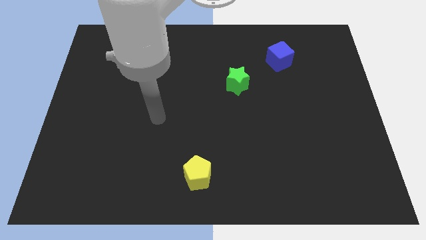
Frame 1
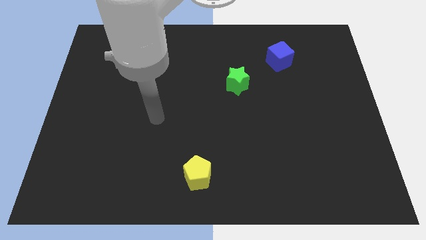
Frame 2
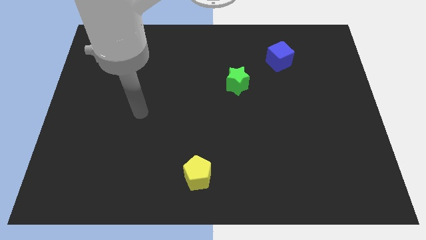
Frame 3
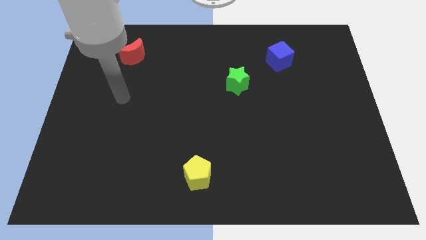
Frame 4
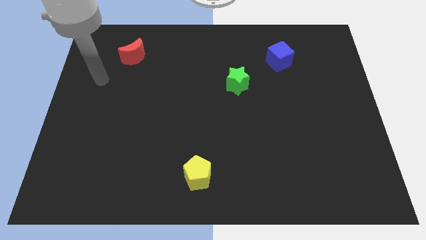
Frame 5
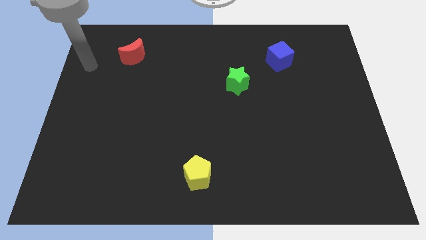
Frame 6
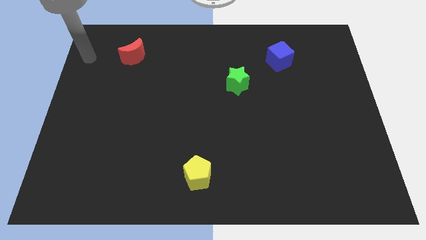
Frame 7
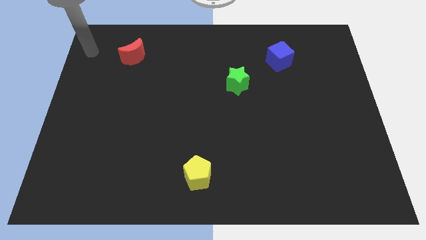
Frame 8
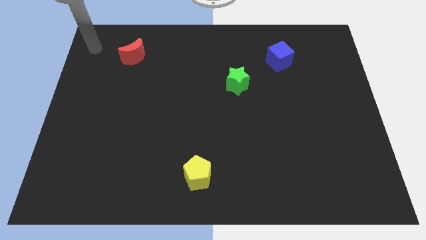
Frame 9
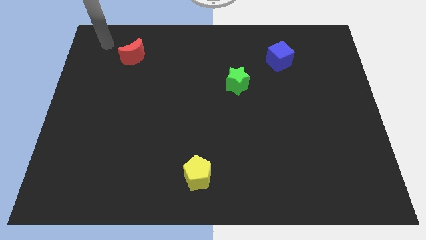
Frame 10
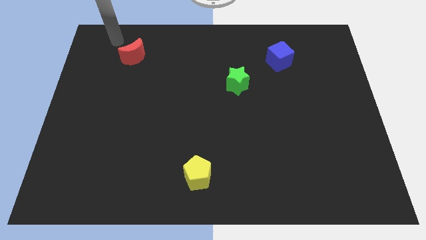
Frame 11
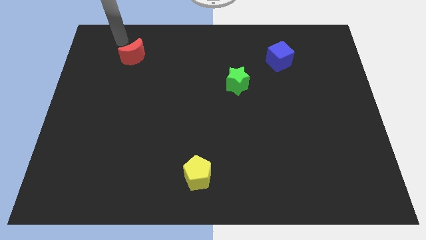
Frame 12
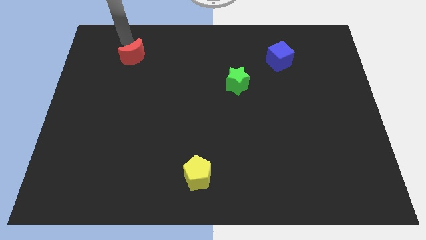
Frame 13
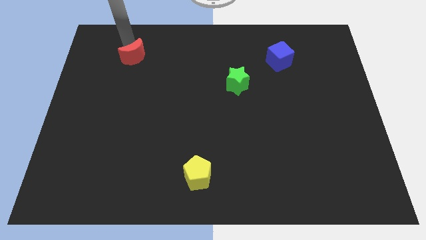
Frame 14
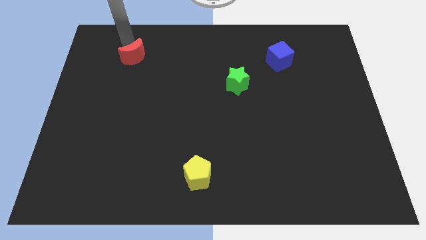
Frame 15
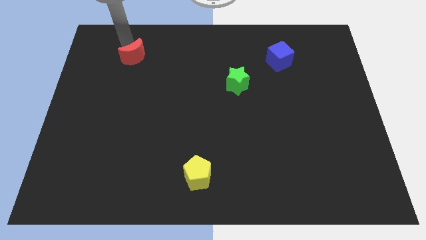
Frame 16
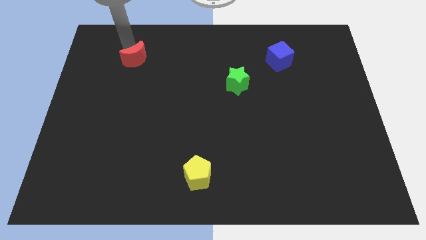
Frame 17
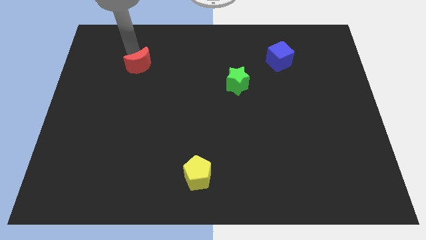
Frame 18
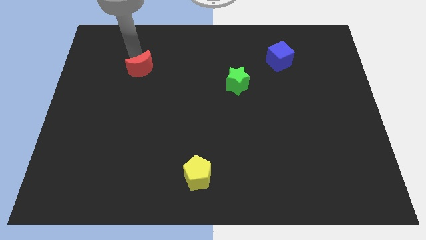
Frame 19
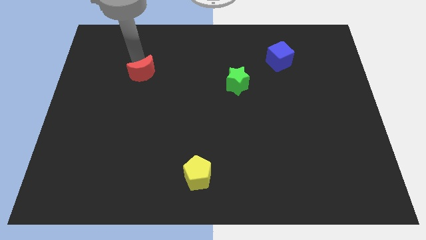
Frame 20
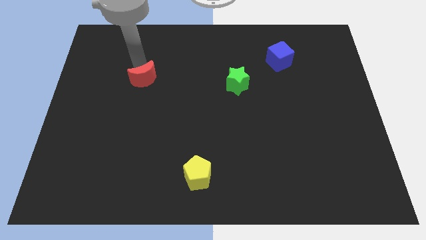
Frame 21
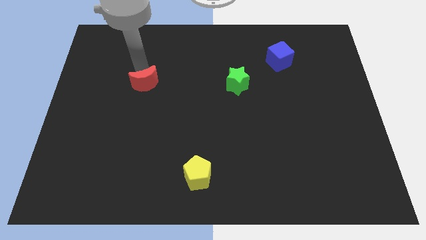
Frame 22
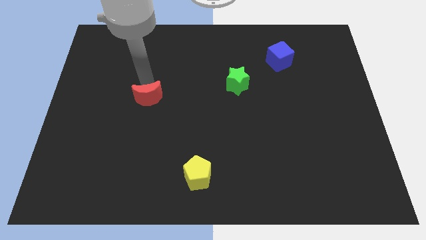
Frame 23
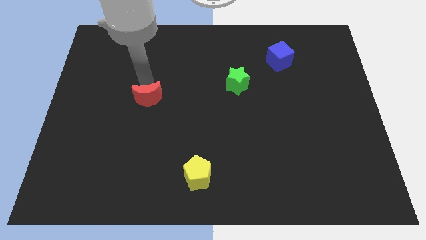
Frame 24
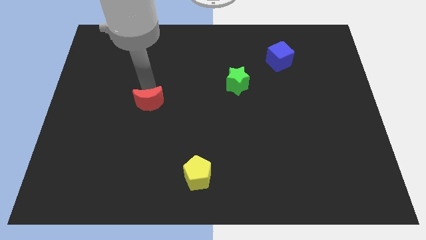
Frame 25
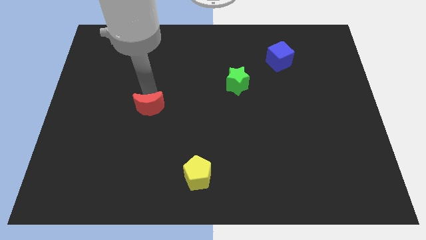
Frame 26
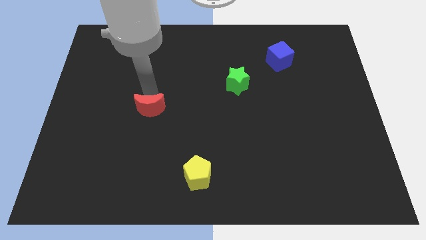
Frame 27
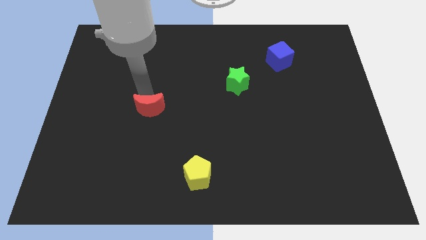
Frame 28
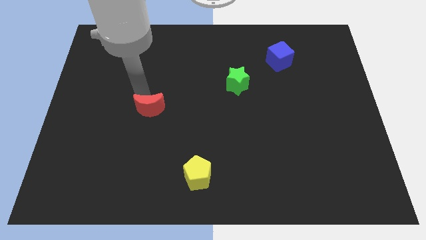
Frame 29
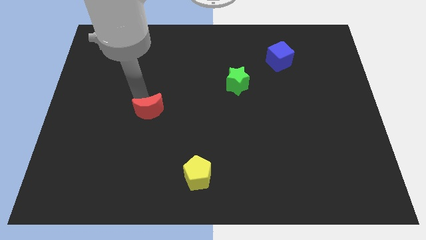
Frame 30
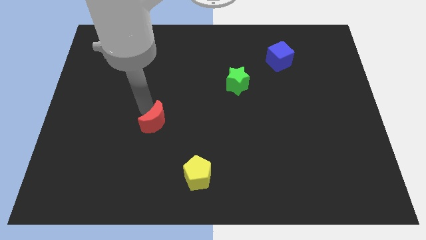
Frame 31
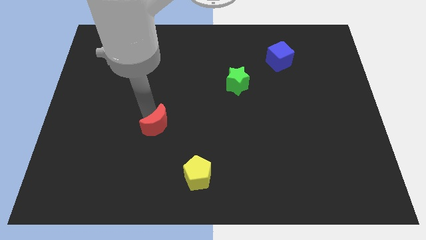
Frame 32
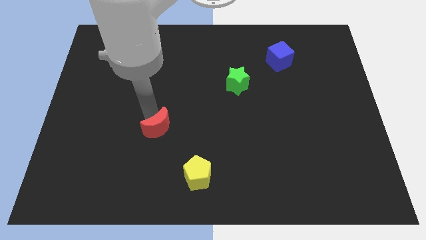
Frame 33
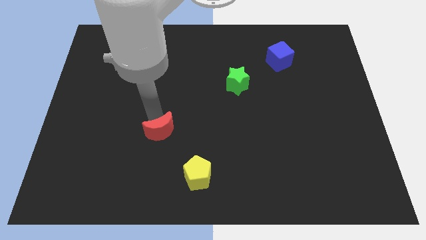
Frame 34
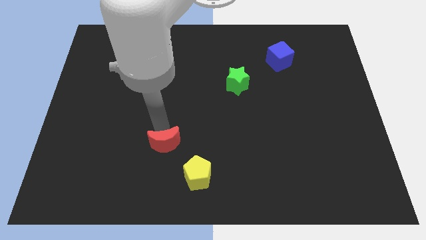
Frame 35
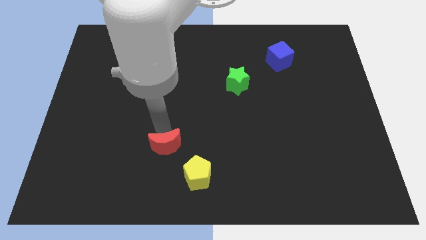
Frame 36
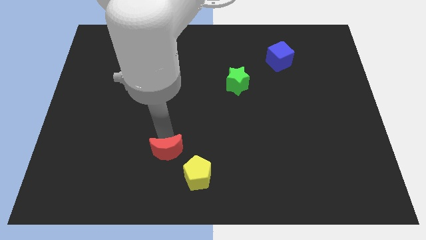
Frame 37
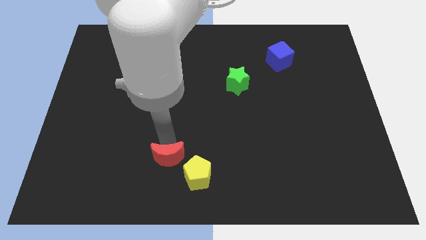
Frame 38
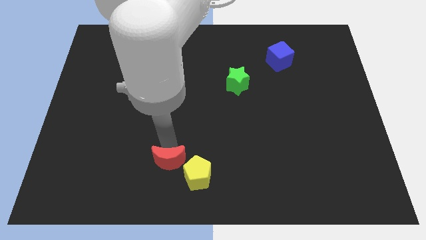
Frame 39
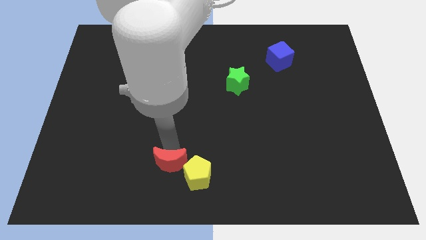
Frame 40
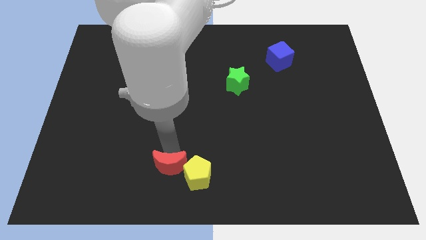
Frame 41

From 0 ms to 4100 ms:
move the red moon towards the yellow block

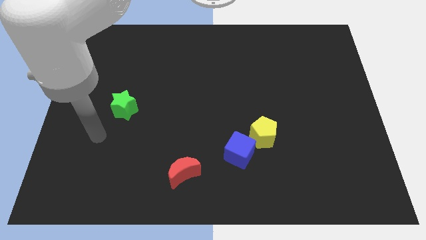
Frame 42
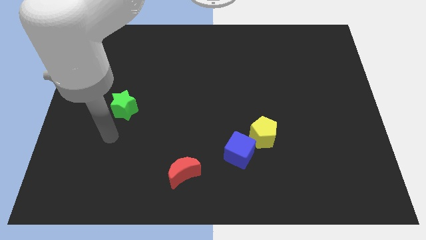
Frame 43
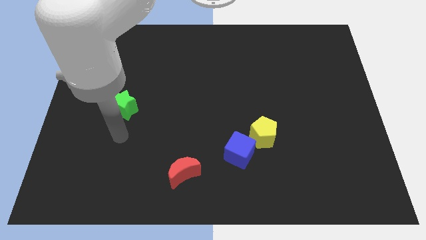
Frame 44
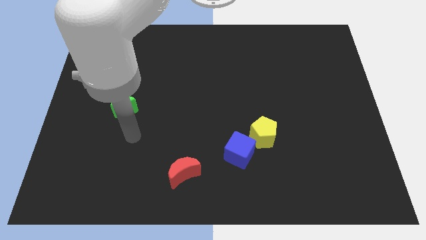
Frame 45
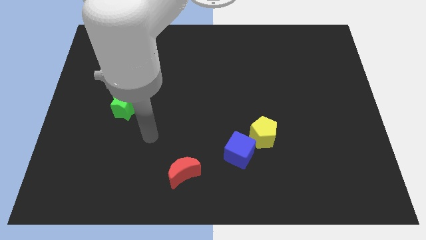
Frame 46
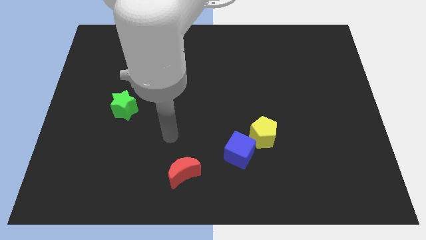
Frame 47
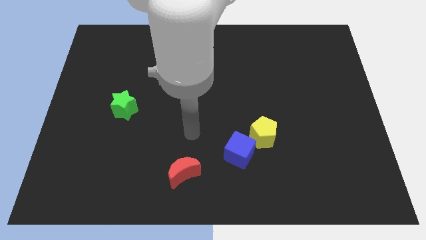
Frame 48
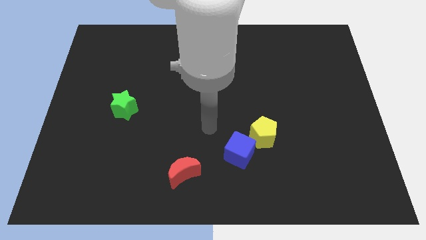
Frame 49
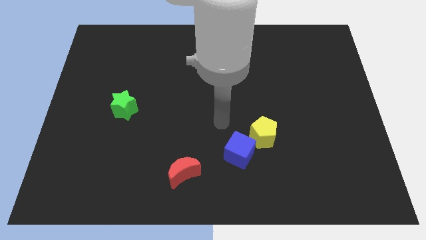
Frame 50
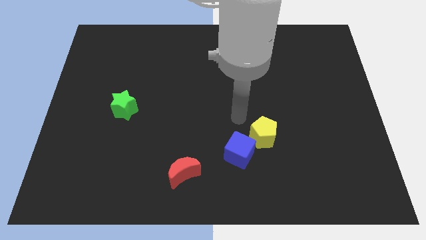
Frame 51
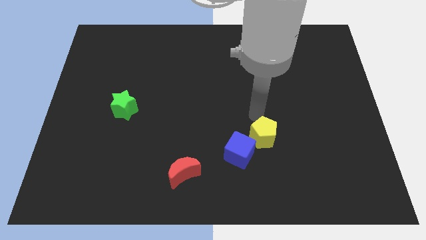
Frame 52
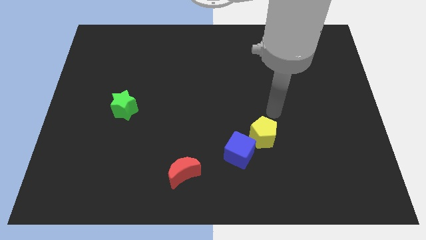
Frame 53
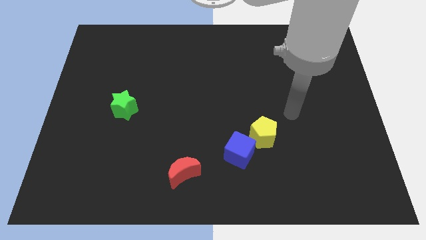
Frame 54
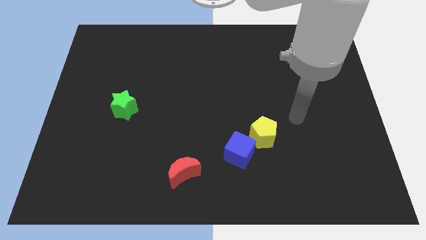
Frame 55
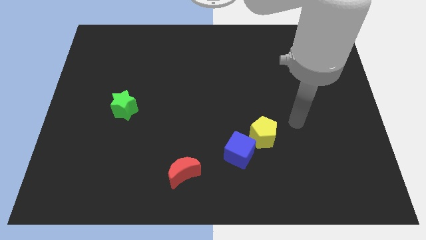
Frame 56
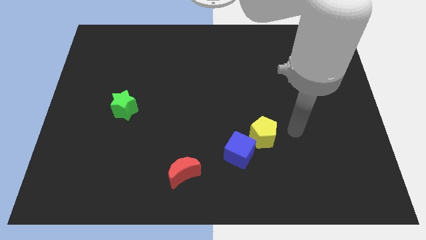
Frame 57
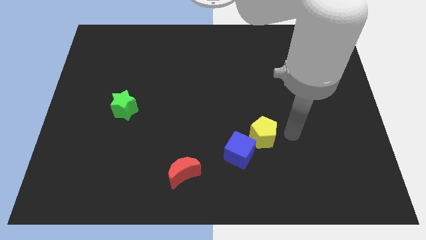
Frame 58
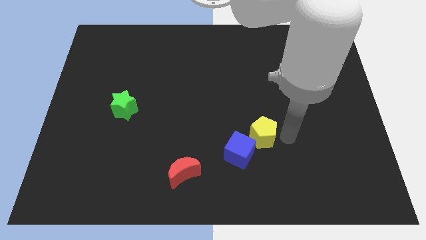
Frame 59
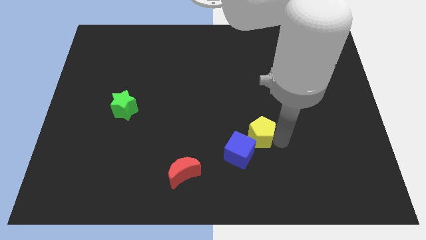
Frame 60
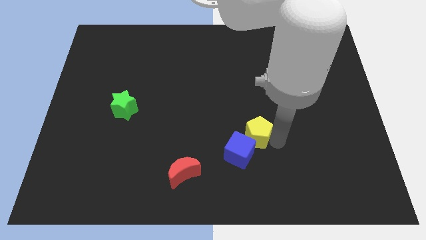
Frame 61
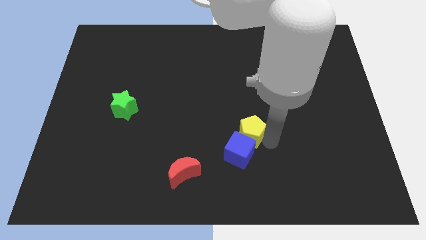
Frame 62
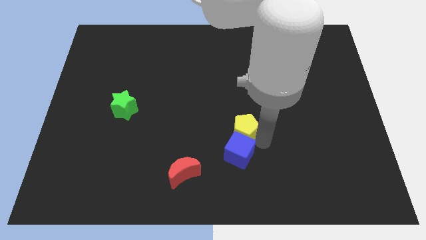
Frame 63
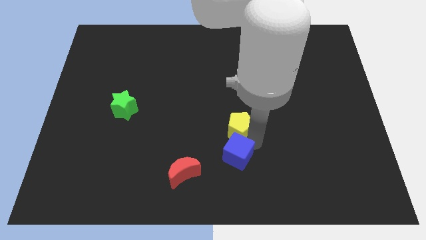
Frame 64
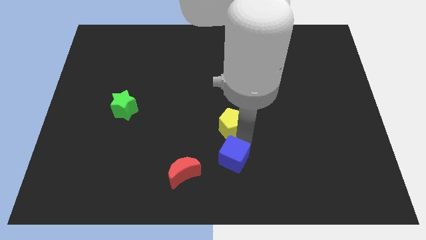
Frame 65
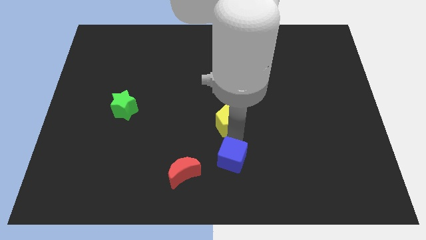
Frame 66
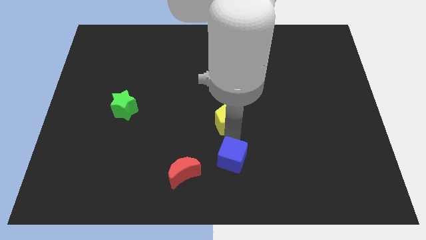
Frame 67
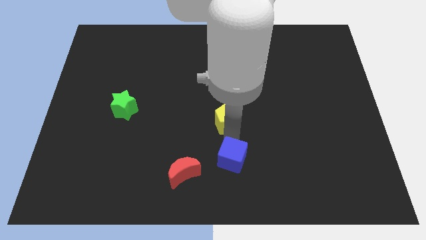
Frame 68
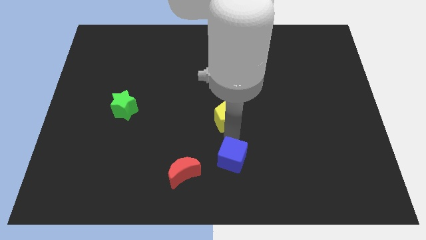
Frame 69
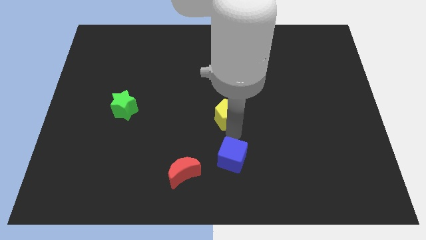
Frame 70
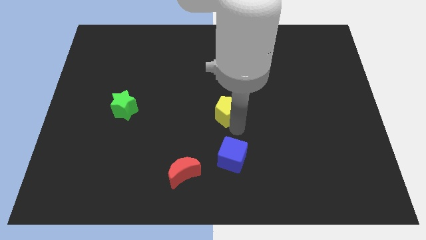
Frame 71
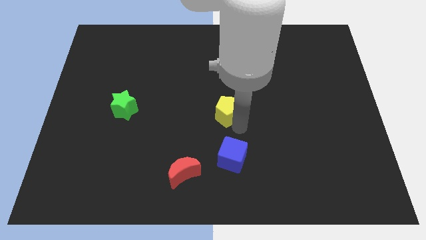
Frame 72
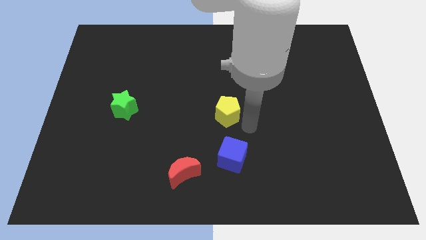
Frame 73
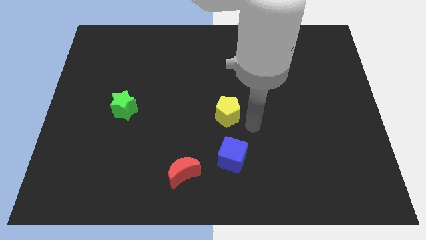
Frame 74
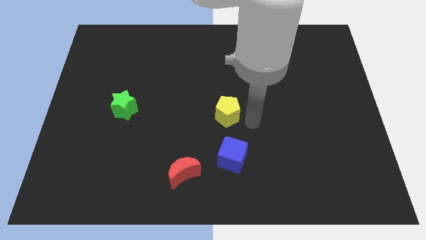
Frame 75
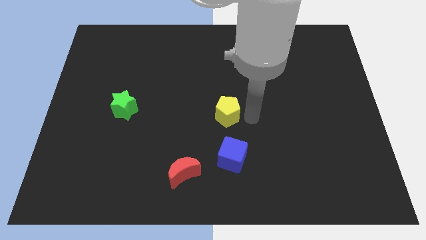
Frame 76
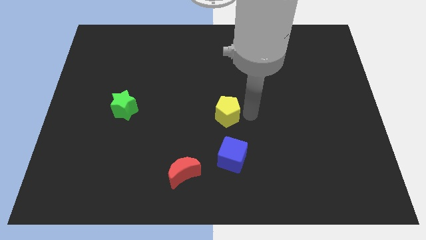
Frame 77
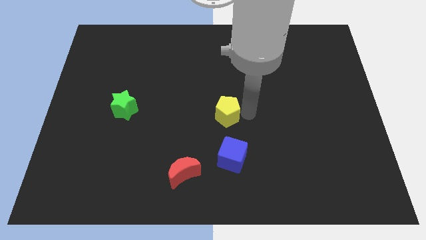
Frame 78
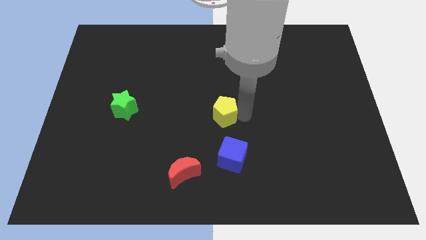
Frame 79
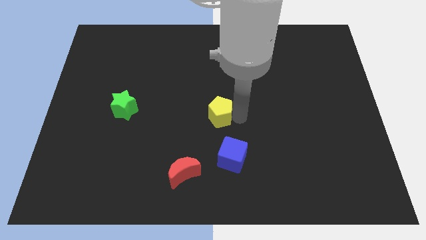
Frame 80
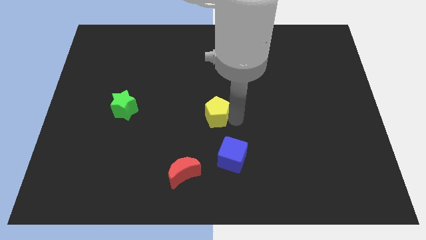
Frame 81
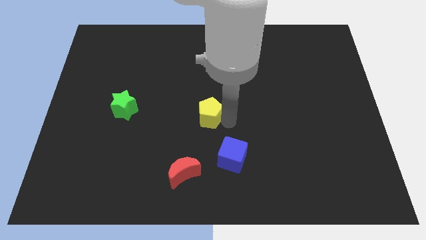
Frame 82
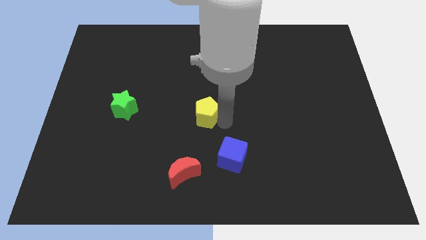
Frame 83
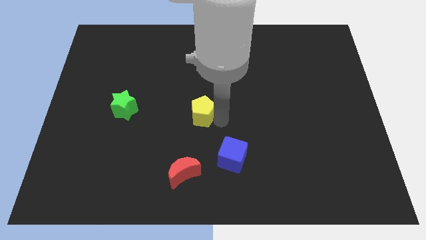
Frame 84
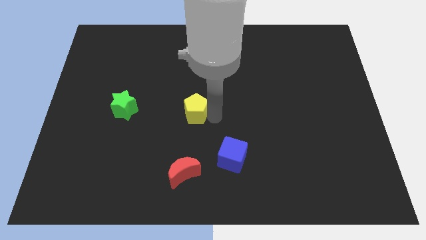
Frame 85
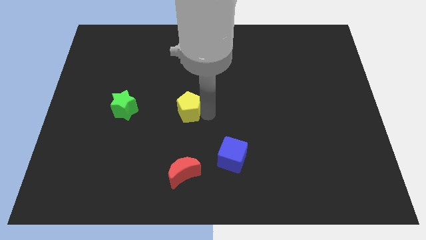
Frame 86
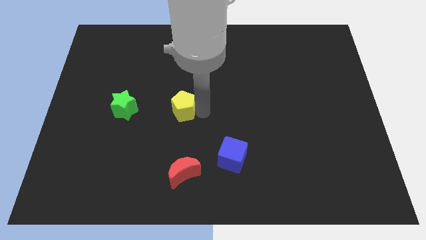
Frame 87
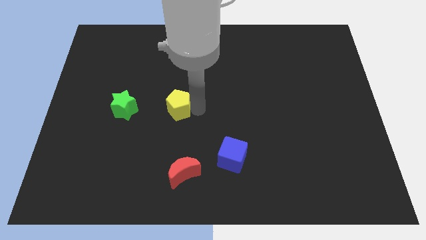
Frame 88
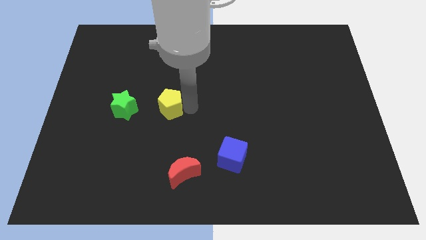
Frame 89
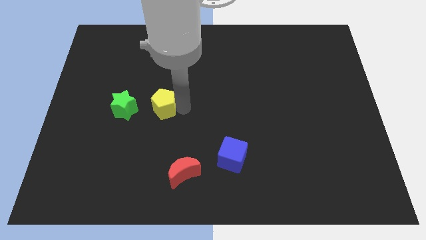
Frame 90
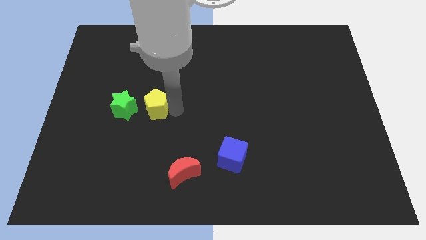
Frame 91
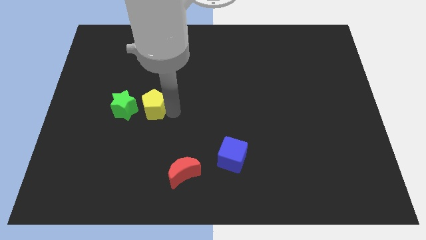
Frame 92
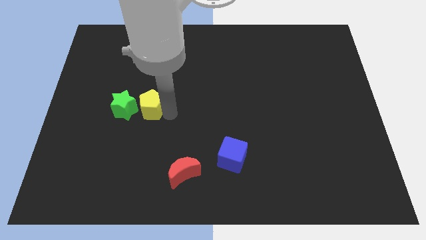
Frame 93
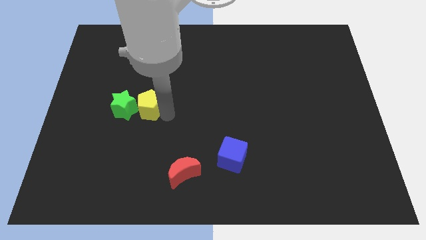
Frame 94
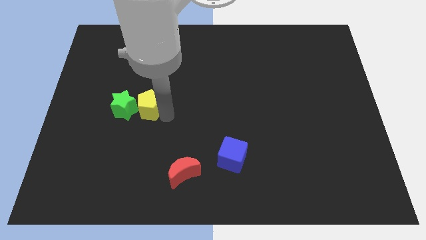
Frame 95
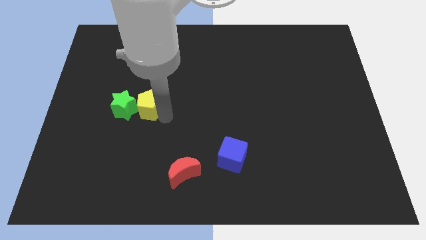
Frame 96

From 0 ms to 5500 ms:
put the yellow block to the star
